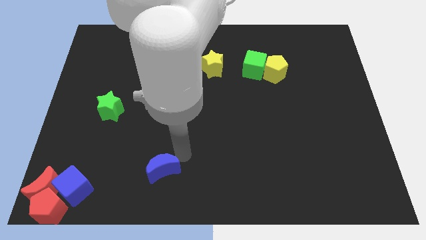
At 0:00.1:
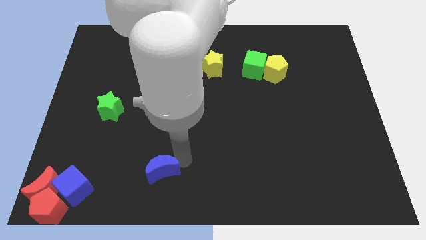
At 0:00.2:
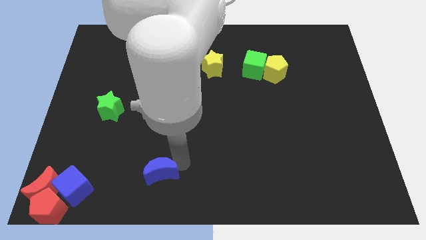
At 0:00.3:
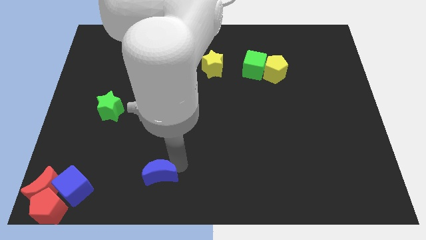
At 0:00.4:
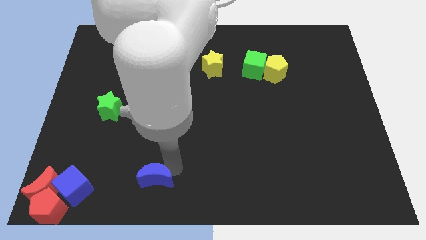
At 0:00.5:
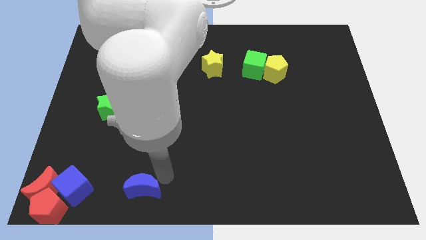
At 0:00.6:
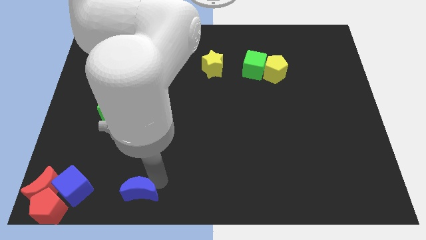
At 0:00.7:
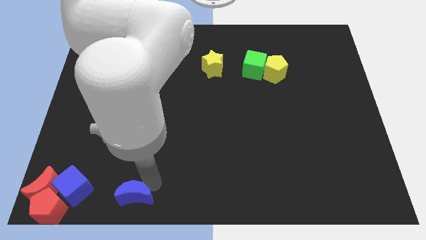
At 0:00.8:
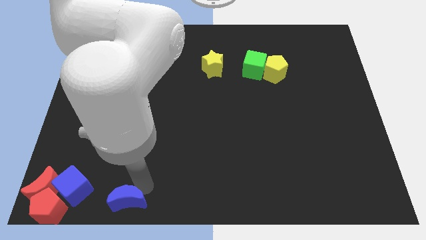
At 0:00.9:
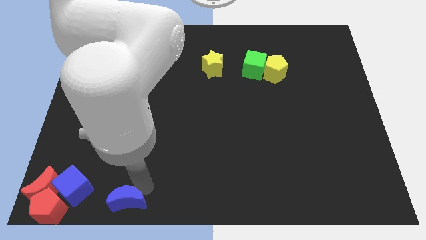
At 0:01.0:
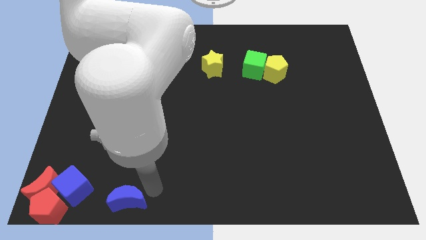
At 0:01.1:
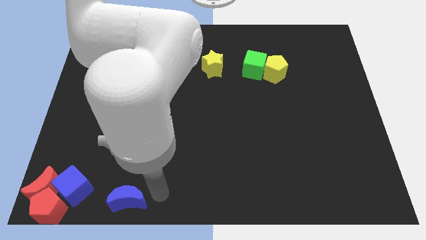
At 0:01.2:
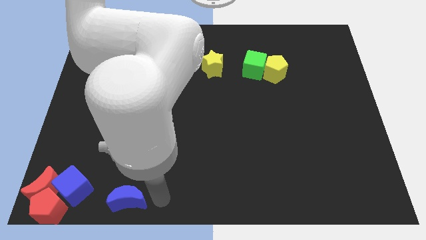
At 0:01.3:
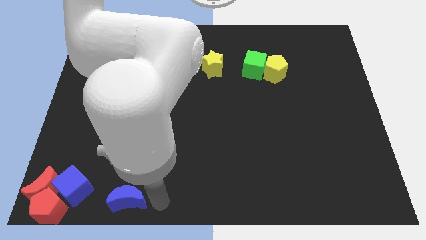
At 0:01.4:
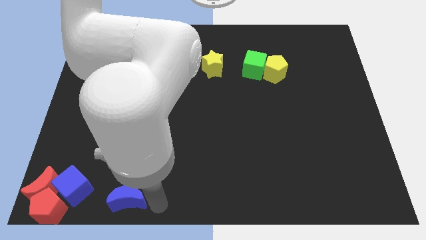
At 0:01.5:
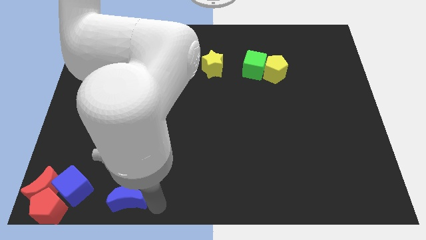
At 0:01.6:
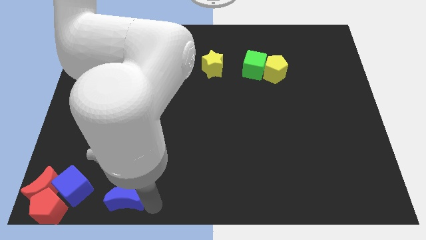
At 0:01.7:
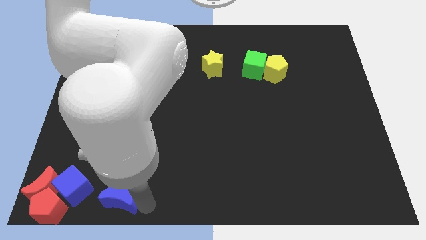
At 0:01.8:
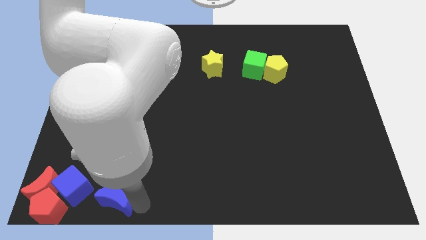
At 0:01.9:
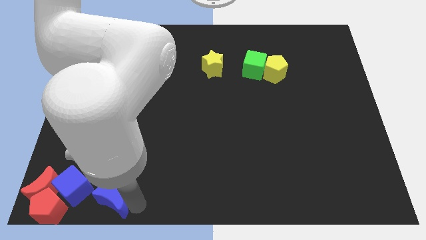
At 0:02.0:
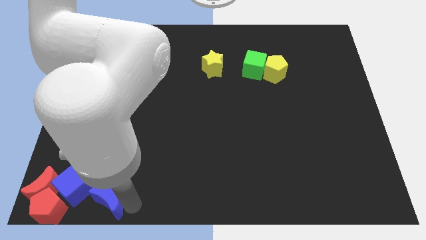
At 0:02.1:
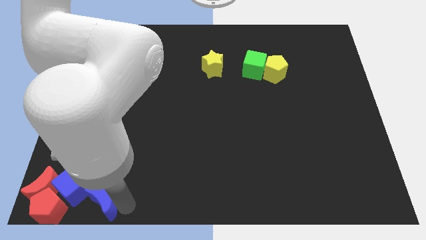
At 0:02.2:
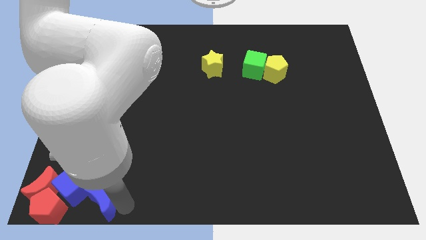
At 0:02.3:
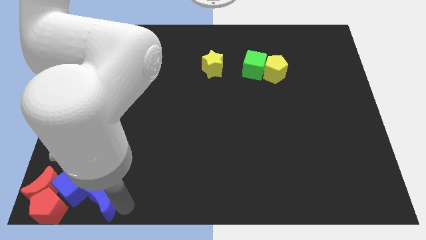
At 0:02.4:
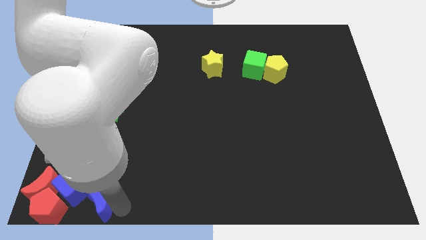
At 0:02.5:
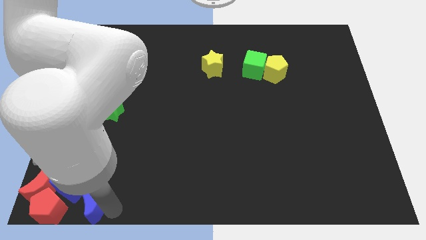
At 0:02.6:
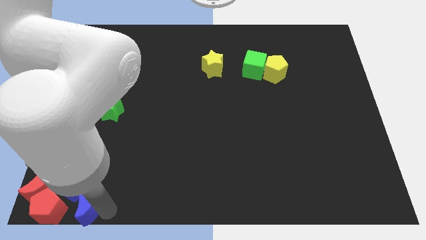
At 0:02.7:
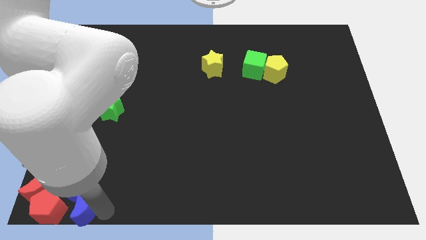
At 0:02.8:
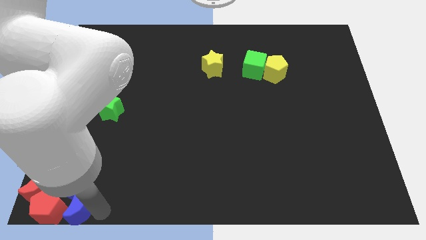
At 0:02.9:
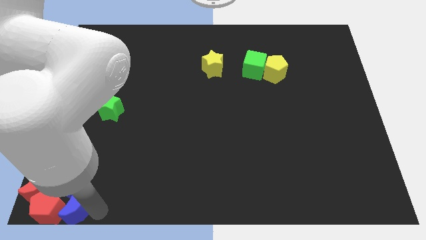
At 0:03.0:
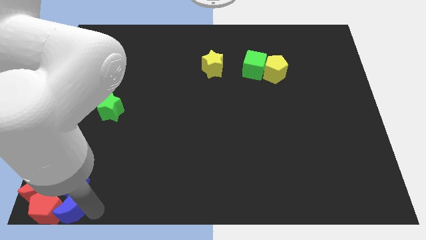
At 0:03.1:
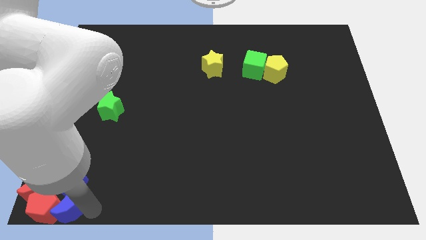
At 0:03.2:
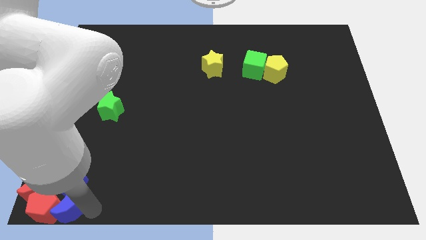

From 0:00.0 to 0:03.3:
move the blue moon into the group of red and blue blocks at the bottom left

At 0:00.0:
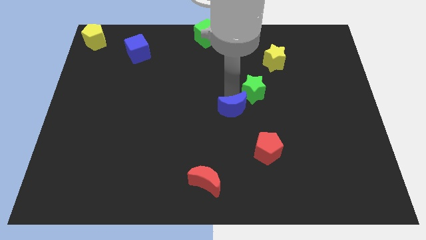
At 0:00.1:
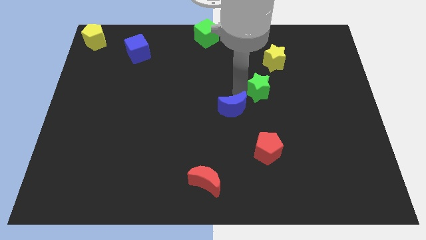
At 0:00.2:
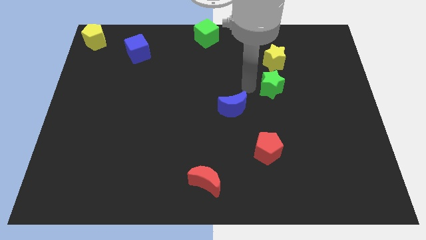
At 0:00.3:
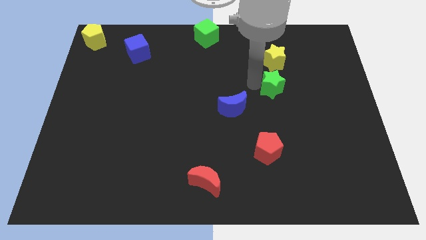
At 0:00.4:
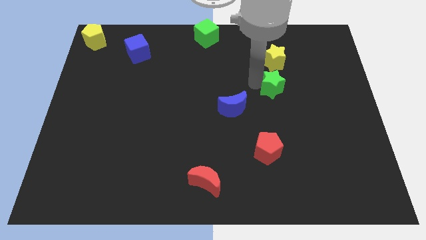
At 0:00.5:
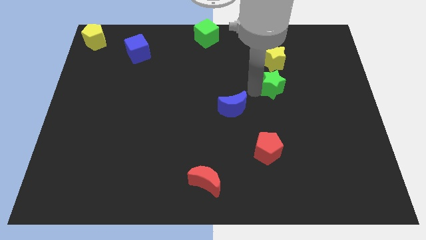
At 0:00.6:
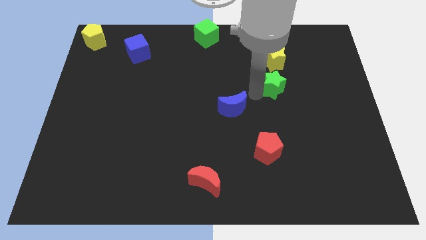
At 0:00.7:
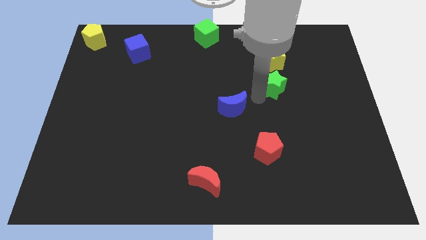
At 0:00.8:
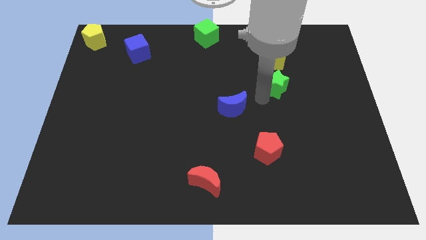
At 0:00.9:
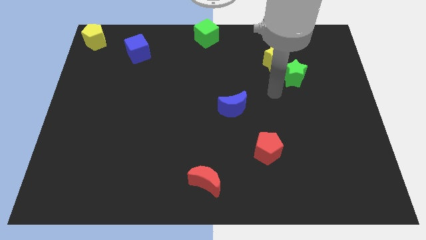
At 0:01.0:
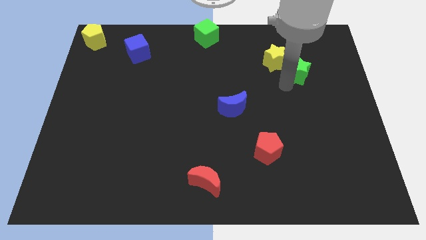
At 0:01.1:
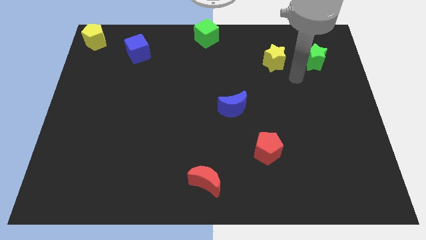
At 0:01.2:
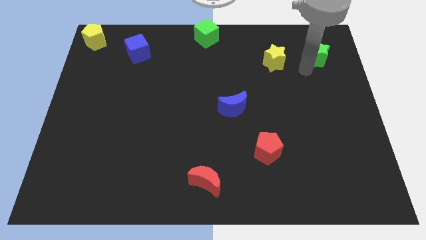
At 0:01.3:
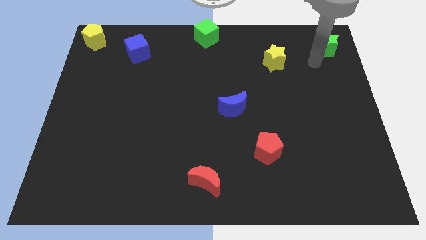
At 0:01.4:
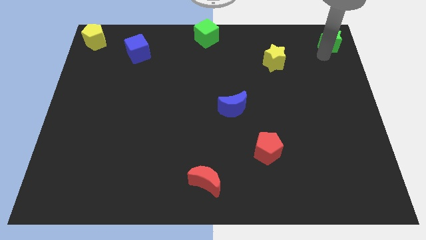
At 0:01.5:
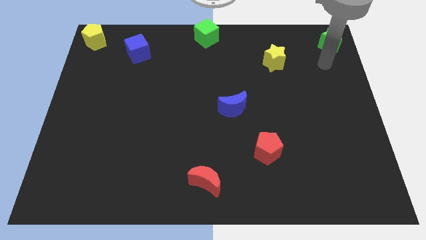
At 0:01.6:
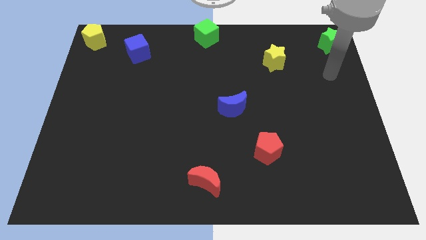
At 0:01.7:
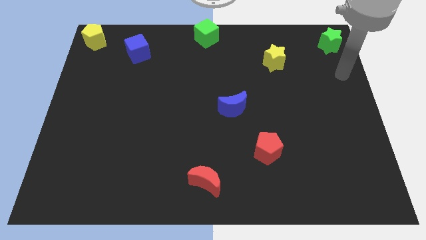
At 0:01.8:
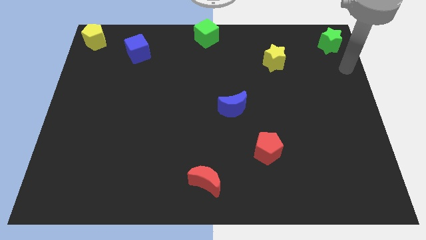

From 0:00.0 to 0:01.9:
place the green star at the top right corner

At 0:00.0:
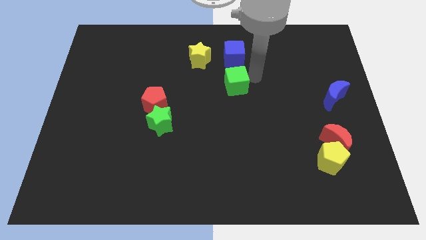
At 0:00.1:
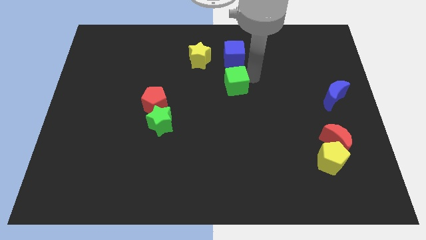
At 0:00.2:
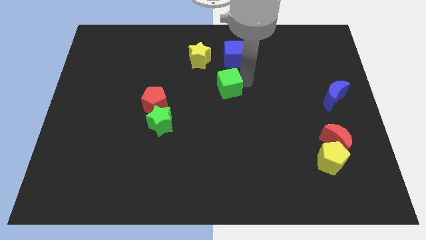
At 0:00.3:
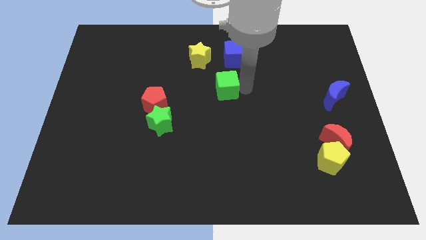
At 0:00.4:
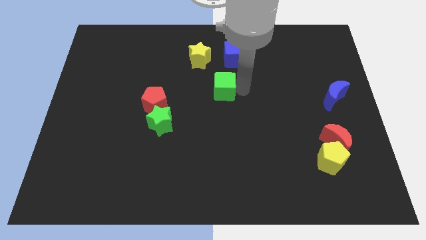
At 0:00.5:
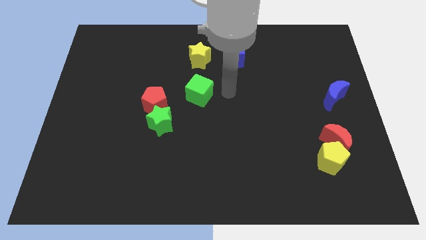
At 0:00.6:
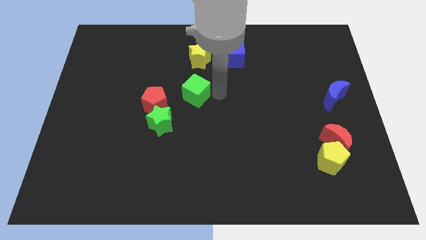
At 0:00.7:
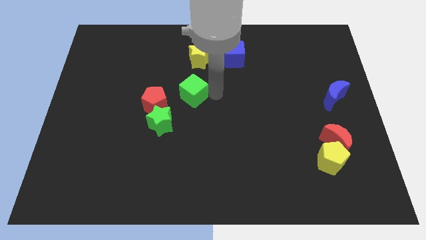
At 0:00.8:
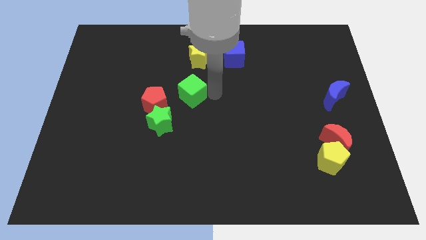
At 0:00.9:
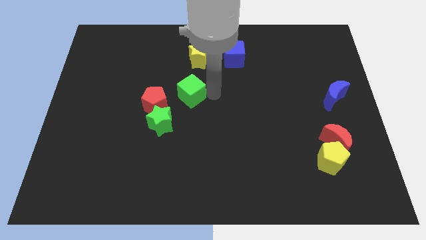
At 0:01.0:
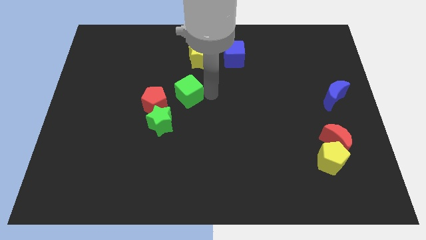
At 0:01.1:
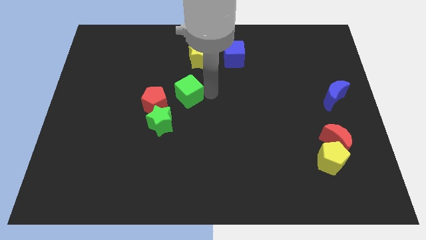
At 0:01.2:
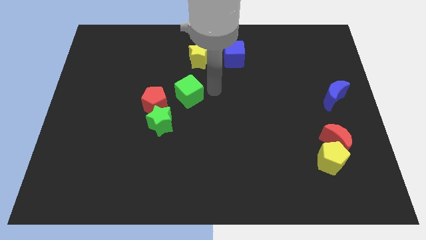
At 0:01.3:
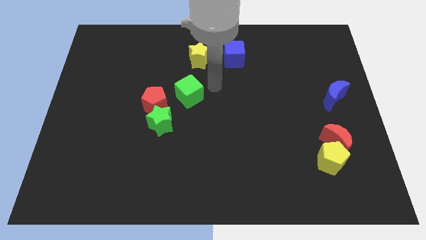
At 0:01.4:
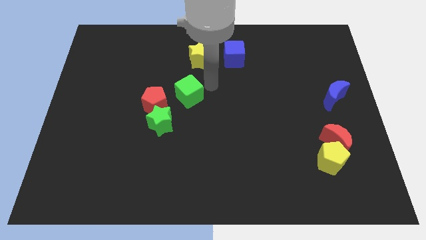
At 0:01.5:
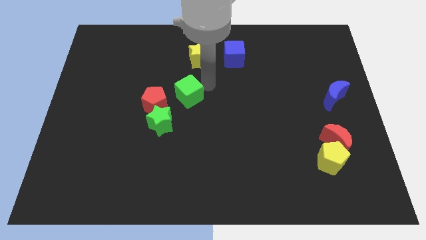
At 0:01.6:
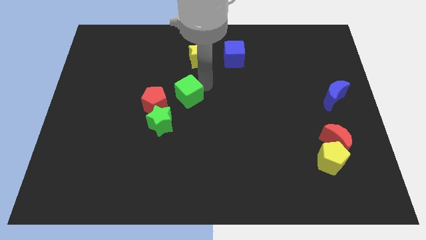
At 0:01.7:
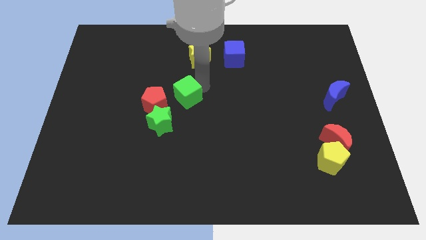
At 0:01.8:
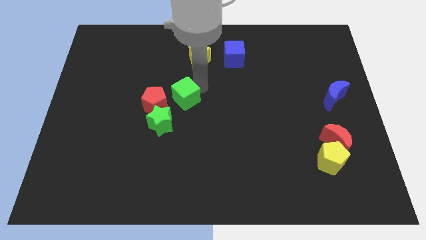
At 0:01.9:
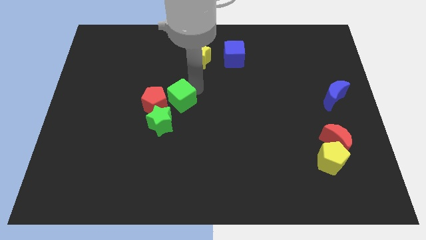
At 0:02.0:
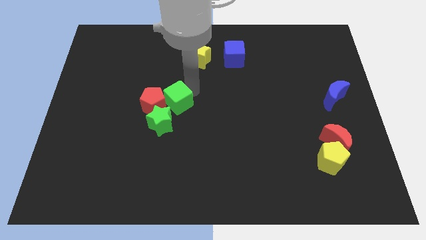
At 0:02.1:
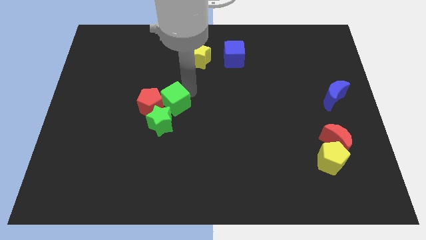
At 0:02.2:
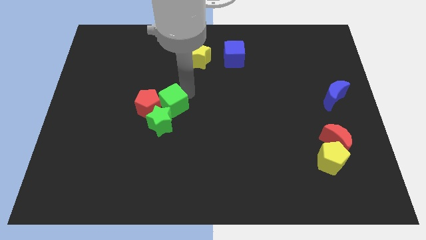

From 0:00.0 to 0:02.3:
place the green cube into red pentagon and green star

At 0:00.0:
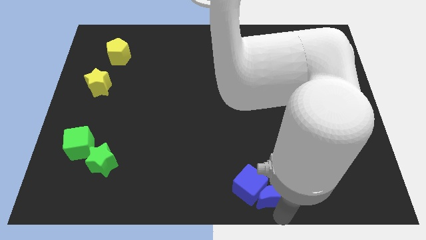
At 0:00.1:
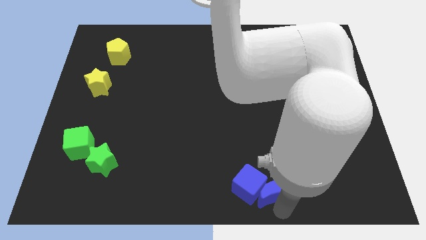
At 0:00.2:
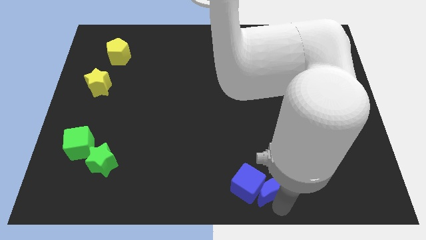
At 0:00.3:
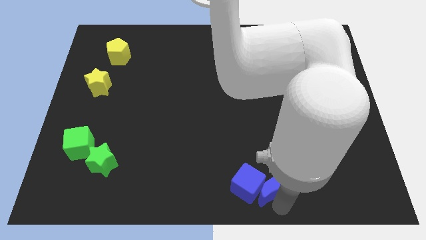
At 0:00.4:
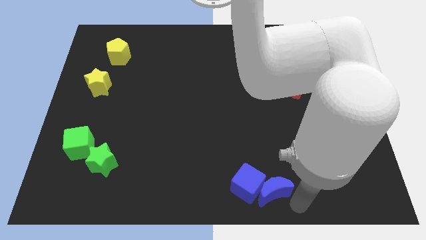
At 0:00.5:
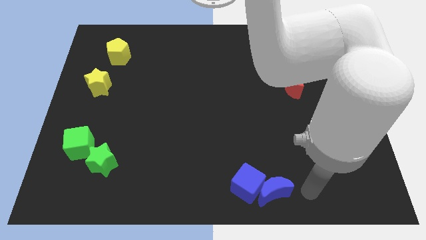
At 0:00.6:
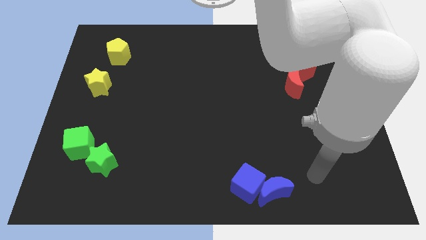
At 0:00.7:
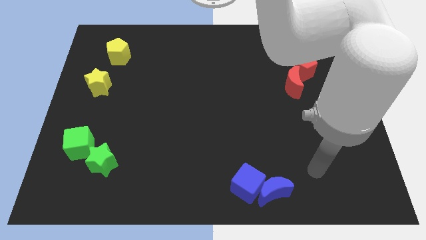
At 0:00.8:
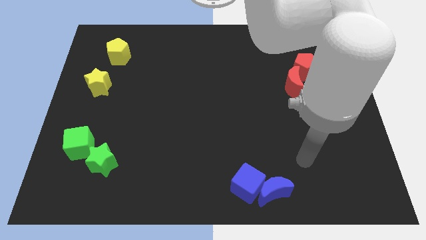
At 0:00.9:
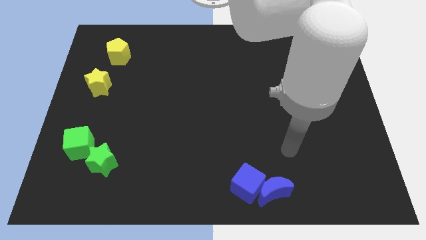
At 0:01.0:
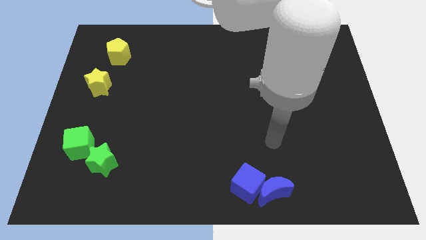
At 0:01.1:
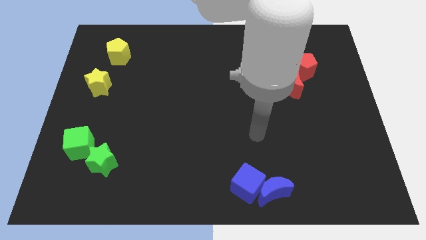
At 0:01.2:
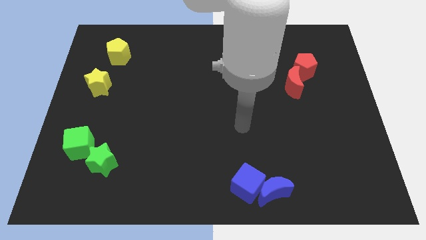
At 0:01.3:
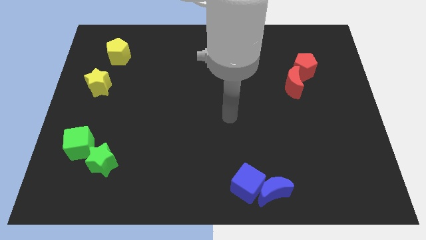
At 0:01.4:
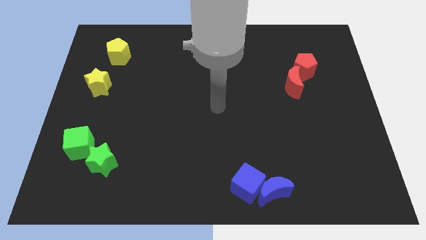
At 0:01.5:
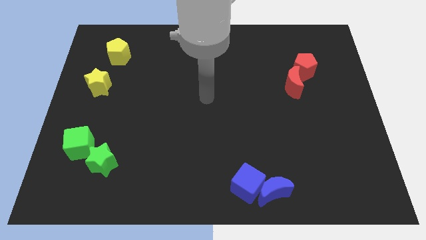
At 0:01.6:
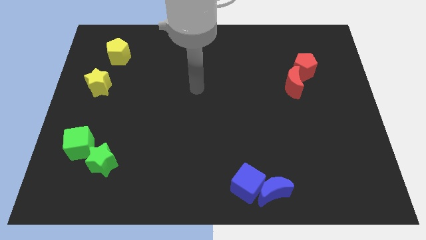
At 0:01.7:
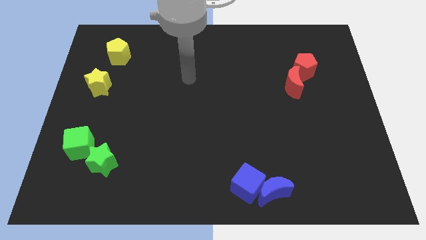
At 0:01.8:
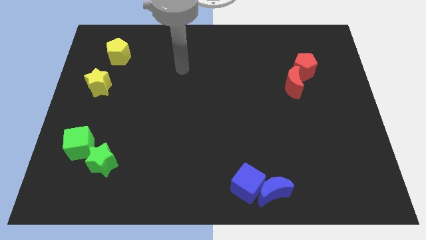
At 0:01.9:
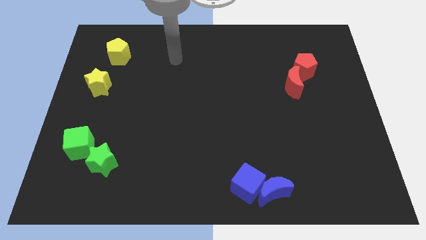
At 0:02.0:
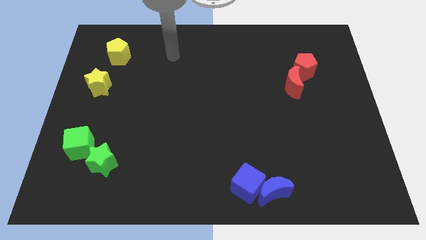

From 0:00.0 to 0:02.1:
move your arm to the right of the yellow pentagon
